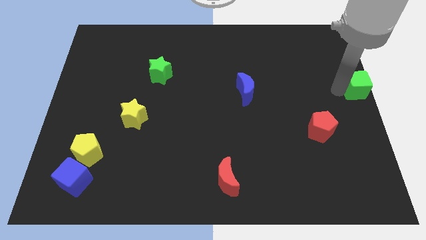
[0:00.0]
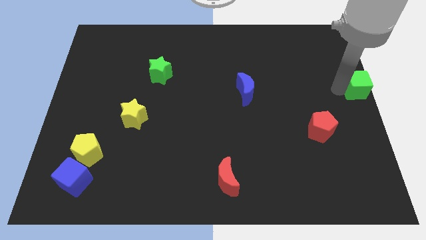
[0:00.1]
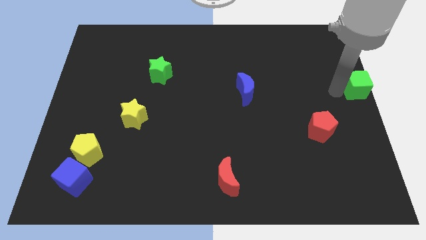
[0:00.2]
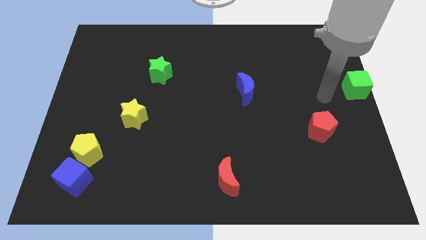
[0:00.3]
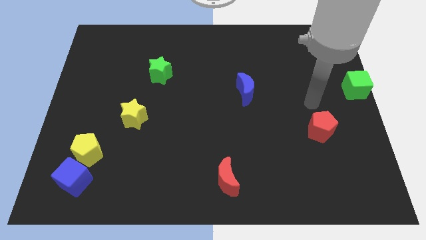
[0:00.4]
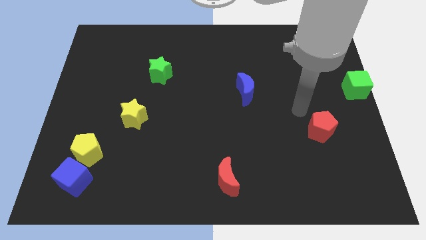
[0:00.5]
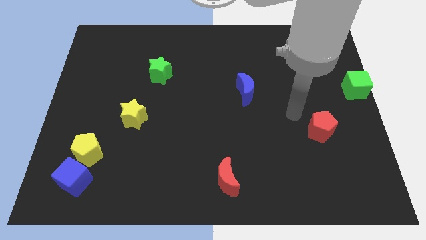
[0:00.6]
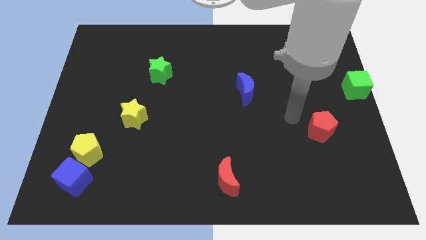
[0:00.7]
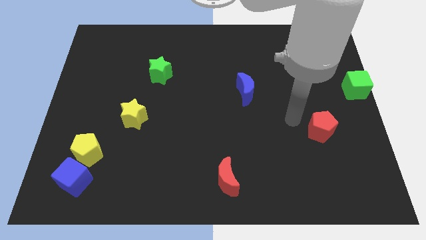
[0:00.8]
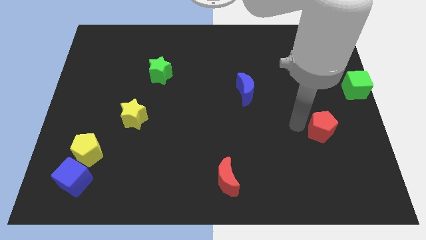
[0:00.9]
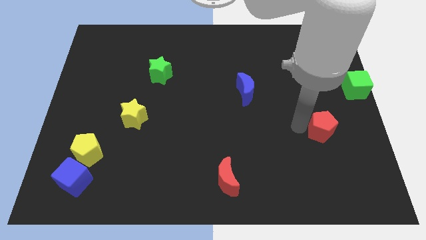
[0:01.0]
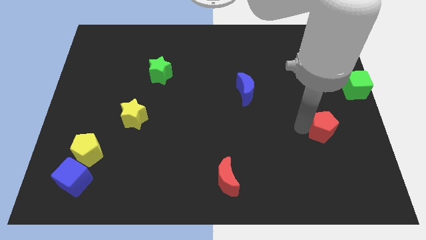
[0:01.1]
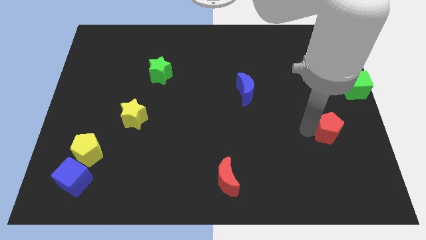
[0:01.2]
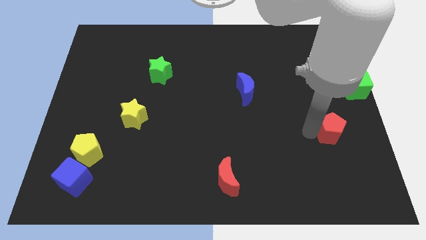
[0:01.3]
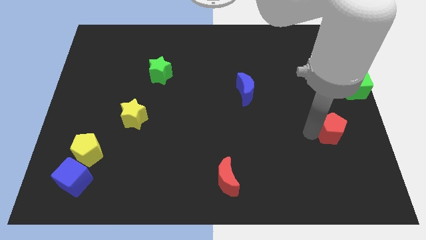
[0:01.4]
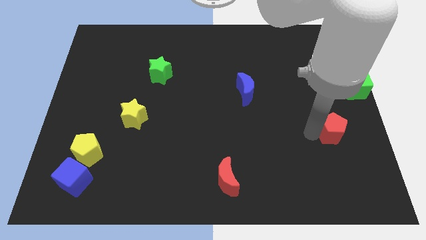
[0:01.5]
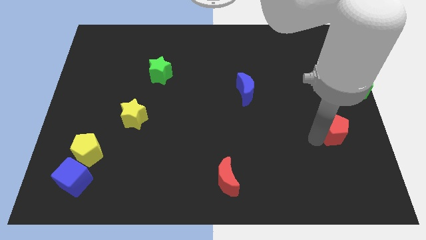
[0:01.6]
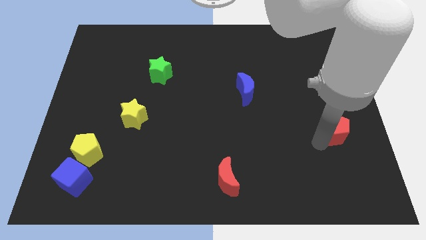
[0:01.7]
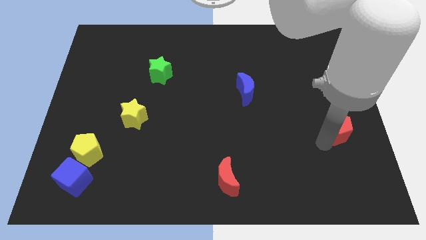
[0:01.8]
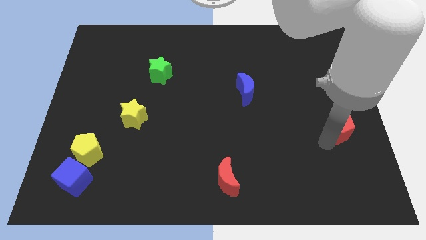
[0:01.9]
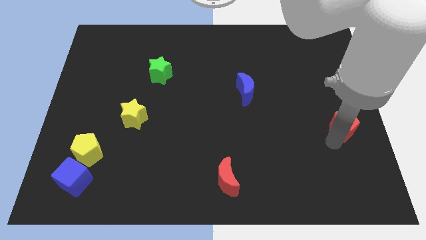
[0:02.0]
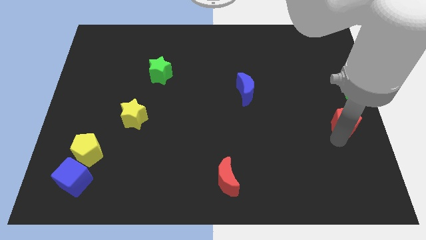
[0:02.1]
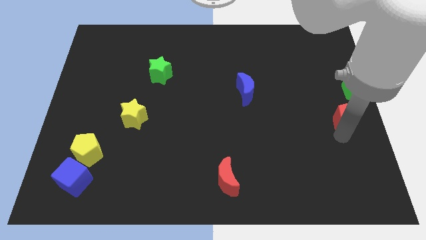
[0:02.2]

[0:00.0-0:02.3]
move your arm away from the green cube

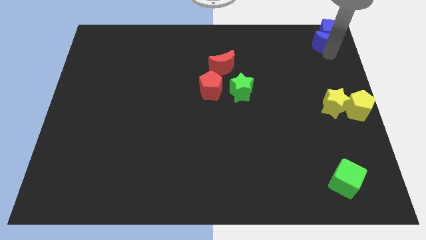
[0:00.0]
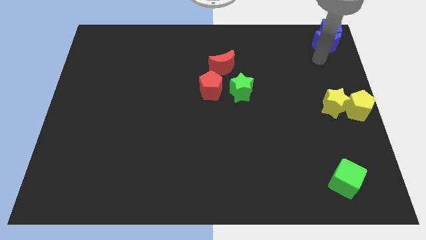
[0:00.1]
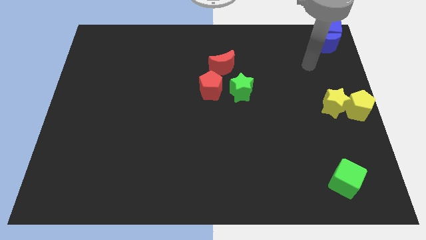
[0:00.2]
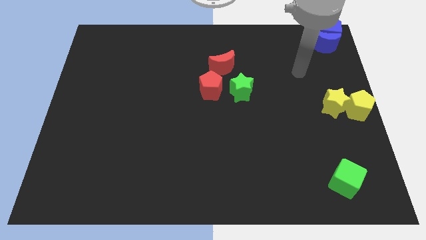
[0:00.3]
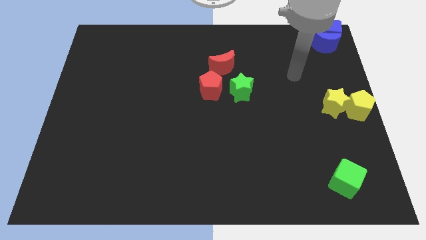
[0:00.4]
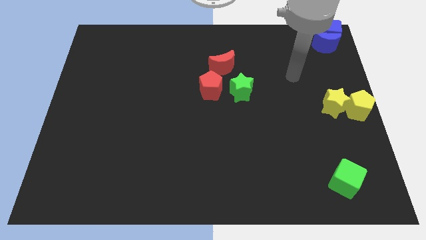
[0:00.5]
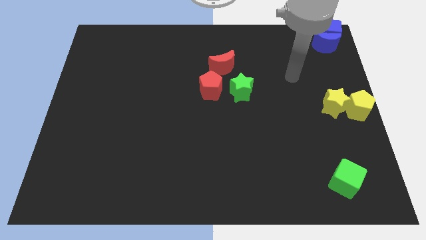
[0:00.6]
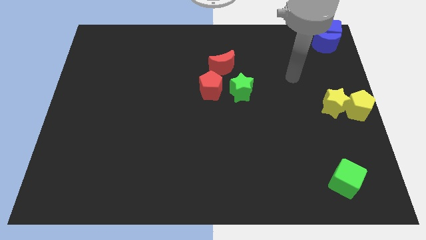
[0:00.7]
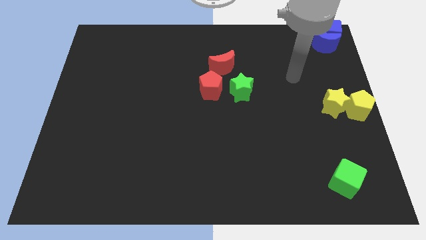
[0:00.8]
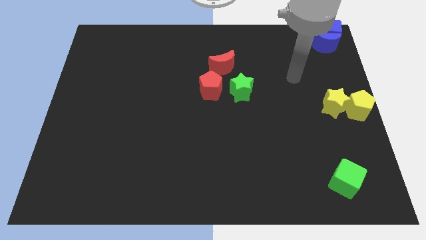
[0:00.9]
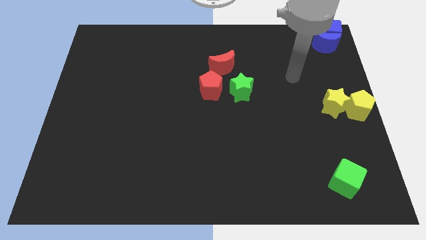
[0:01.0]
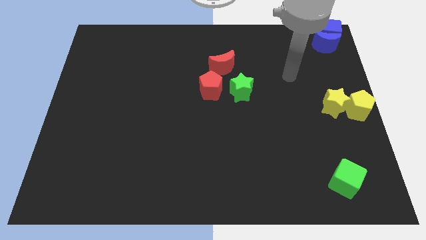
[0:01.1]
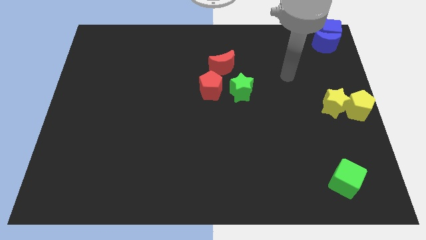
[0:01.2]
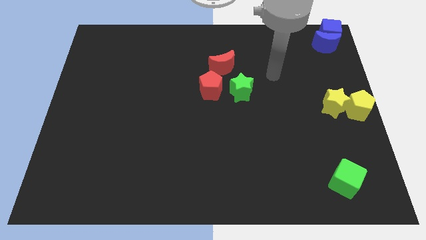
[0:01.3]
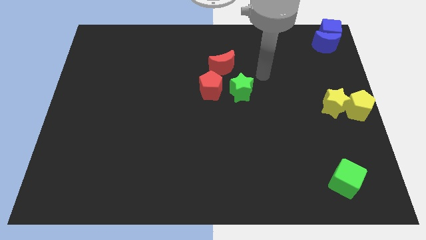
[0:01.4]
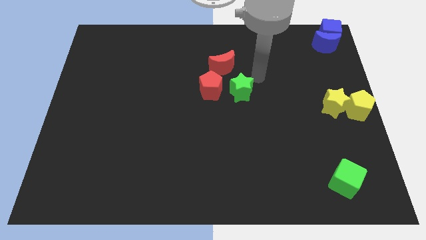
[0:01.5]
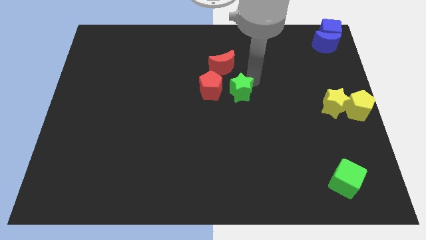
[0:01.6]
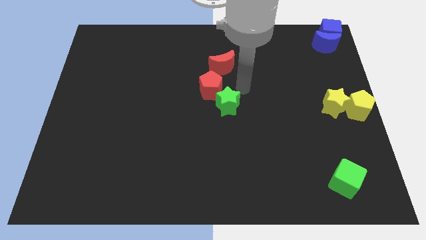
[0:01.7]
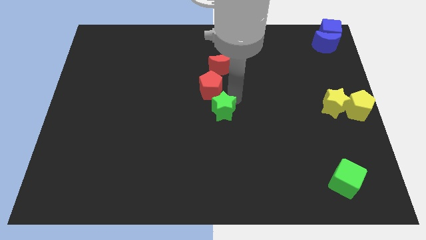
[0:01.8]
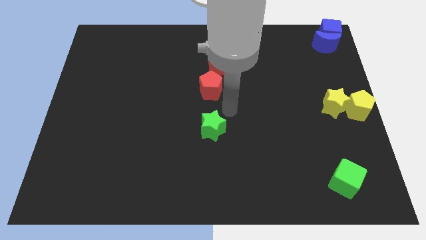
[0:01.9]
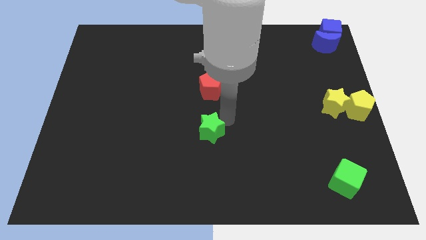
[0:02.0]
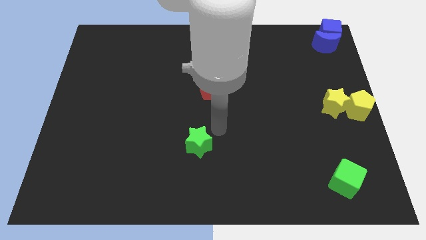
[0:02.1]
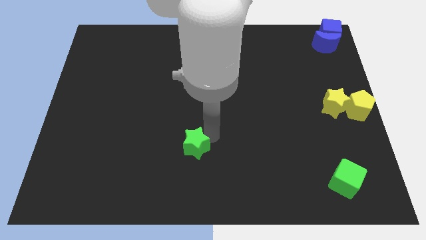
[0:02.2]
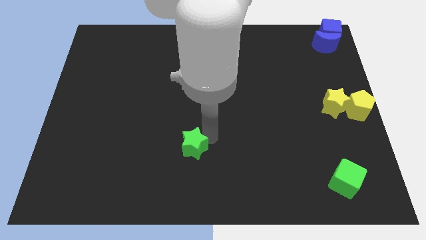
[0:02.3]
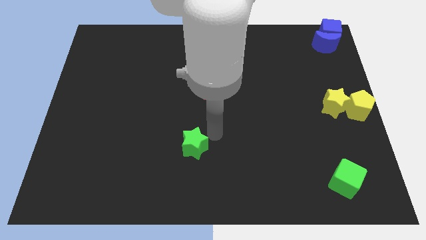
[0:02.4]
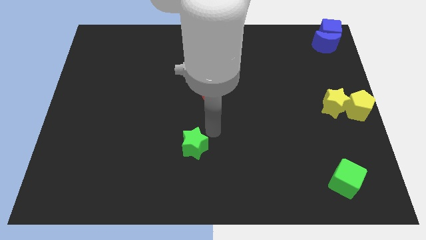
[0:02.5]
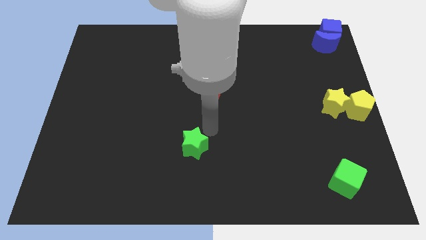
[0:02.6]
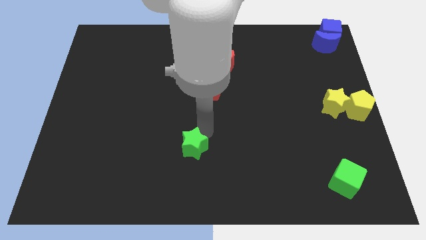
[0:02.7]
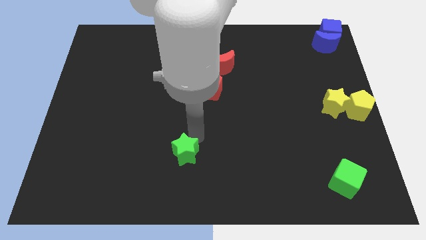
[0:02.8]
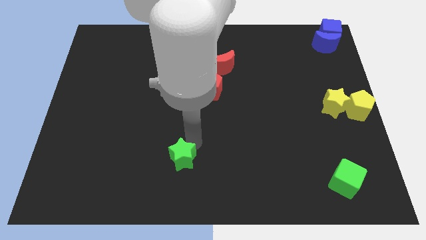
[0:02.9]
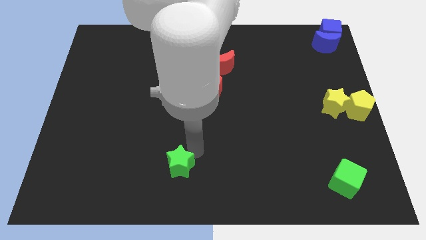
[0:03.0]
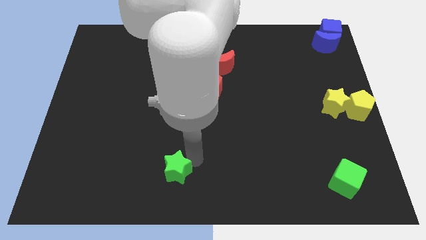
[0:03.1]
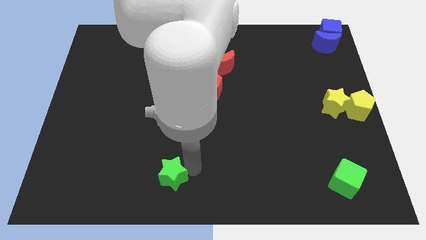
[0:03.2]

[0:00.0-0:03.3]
move the green star to the left of the green cube

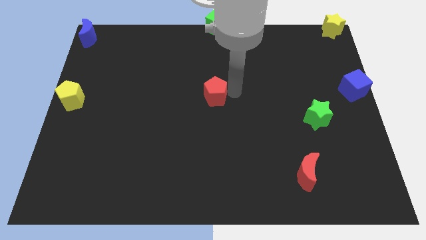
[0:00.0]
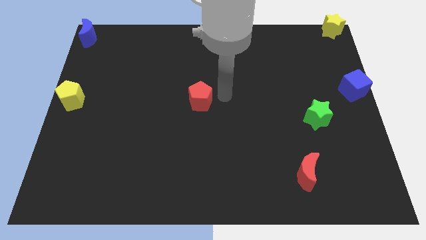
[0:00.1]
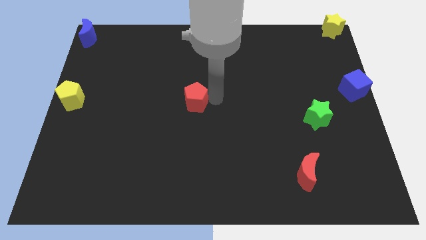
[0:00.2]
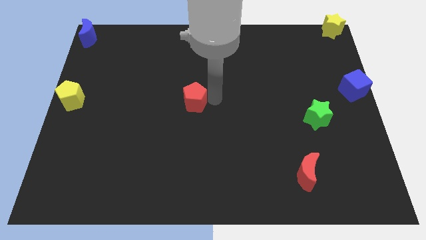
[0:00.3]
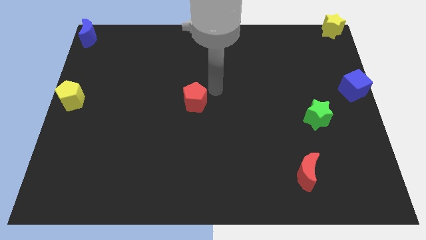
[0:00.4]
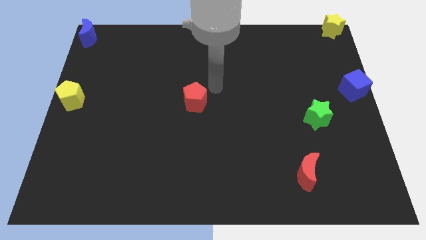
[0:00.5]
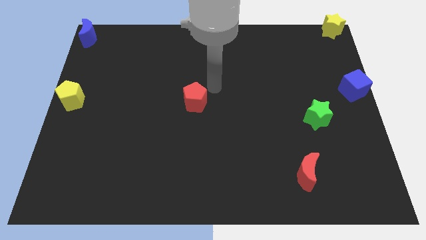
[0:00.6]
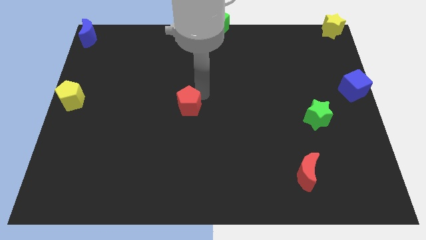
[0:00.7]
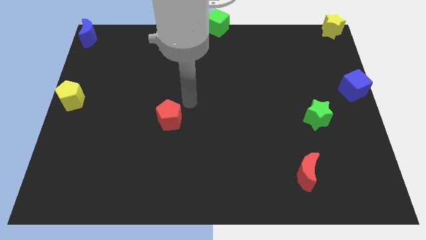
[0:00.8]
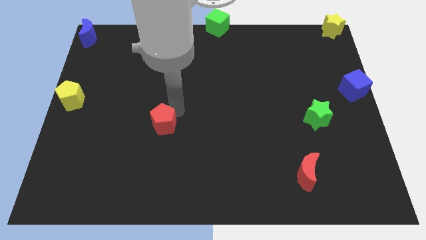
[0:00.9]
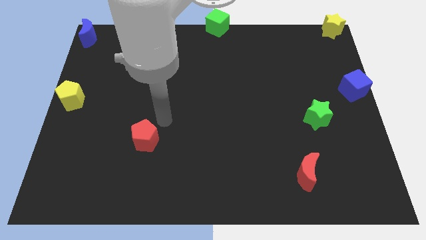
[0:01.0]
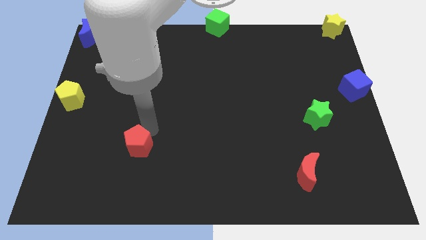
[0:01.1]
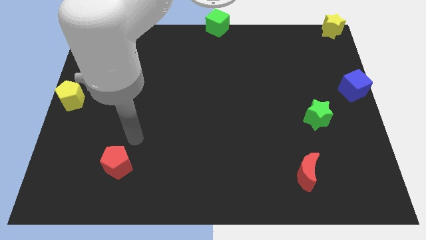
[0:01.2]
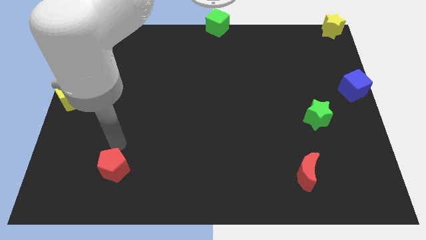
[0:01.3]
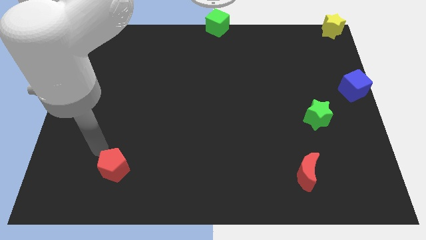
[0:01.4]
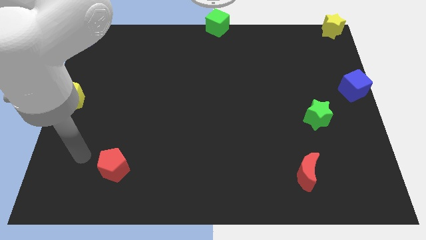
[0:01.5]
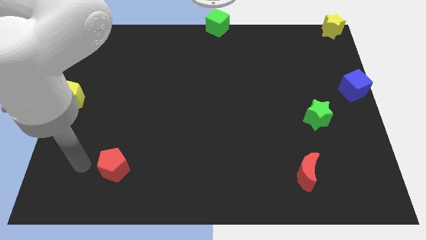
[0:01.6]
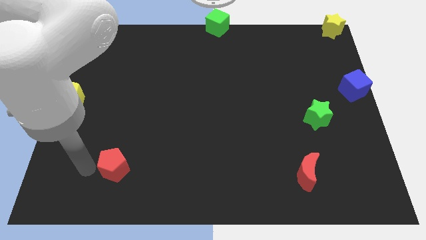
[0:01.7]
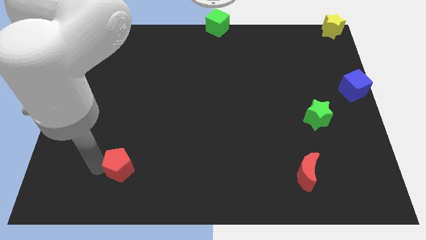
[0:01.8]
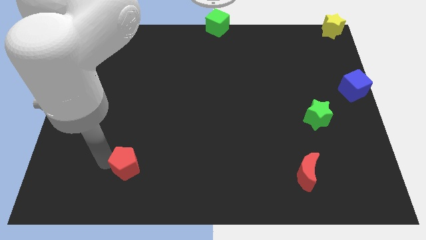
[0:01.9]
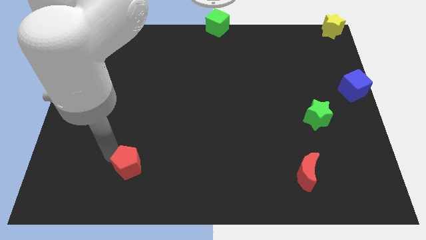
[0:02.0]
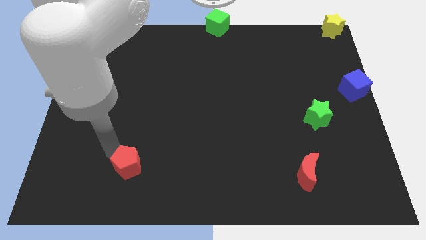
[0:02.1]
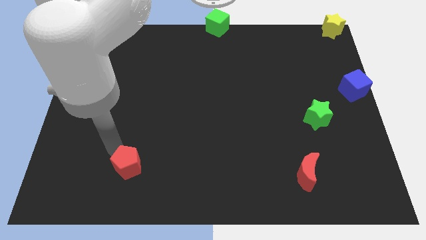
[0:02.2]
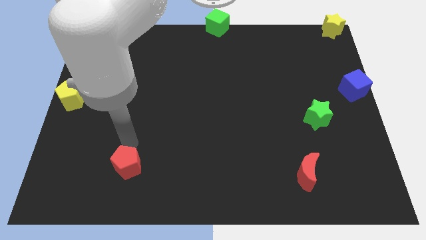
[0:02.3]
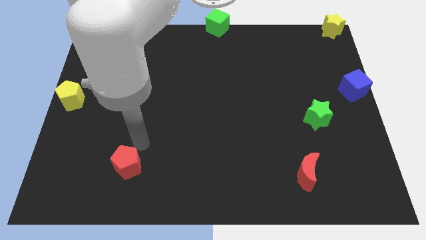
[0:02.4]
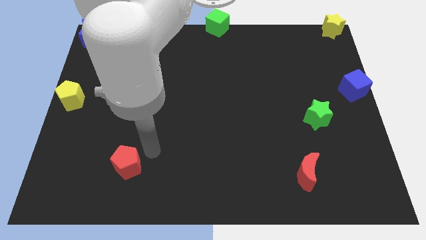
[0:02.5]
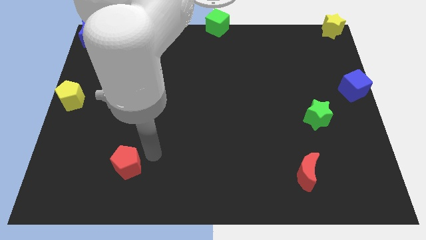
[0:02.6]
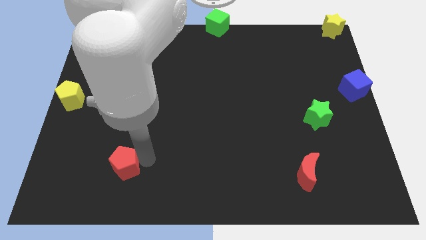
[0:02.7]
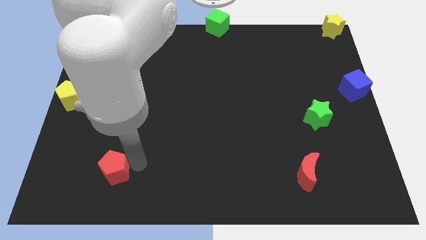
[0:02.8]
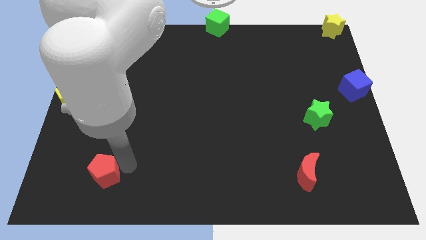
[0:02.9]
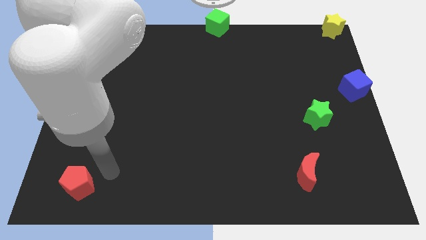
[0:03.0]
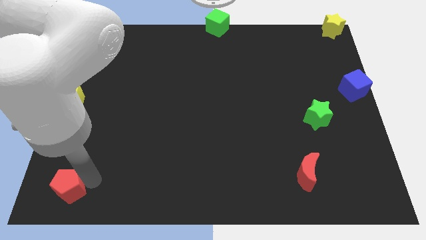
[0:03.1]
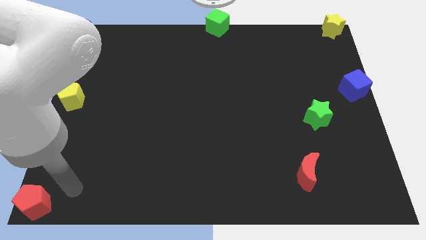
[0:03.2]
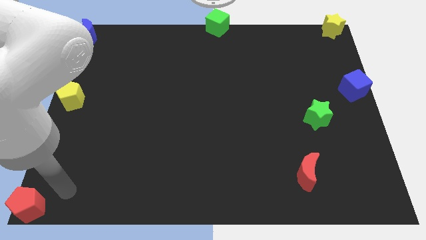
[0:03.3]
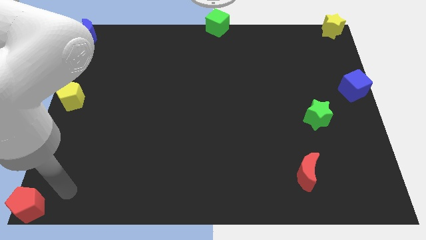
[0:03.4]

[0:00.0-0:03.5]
push the red pentagon to the bottom left of the board
